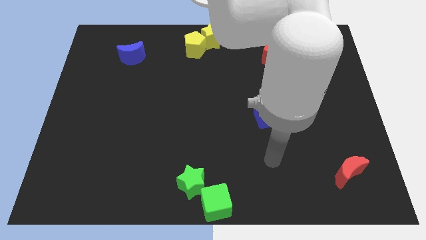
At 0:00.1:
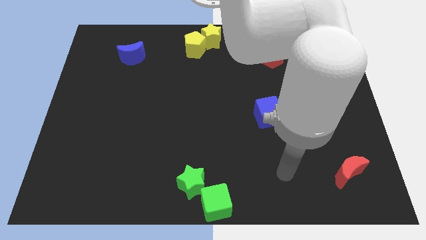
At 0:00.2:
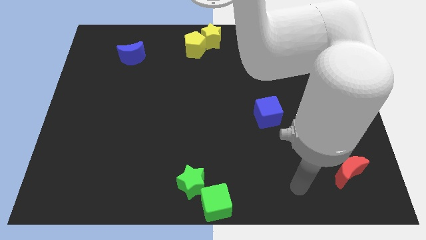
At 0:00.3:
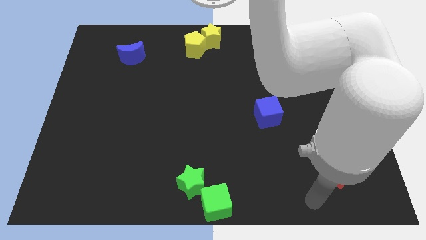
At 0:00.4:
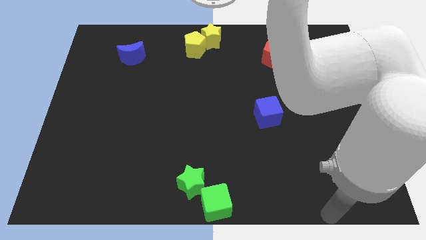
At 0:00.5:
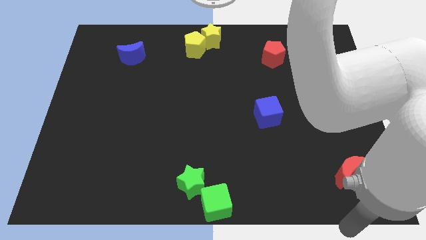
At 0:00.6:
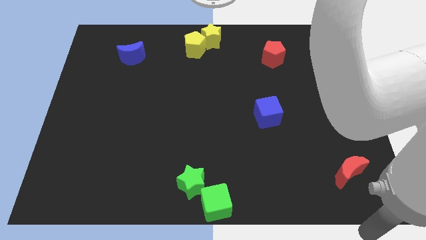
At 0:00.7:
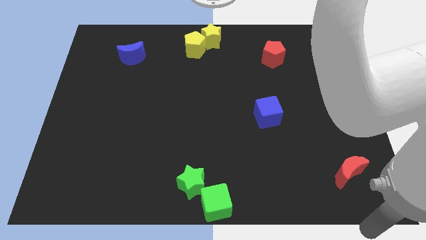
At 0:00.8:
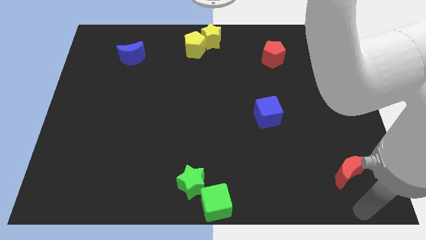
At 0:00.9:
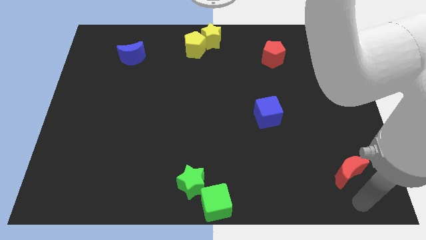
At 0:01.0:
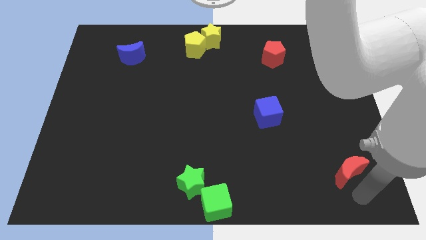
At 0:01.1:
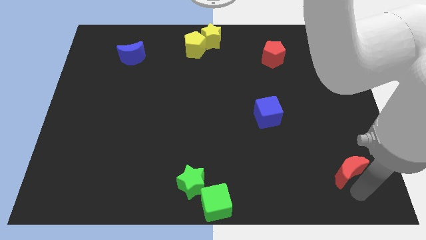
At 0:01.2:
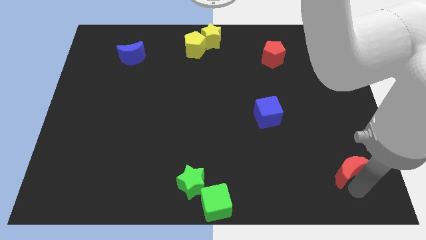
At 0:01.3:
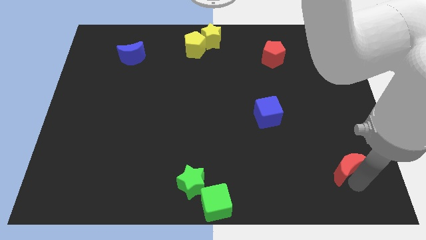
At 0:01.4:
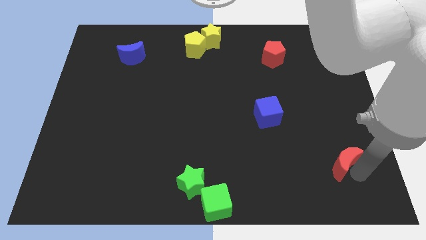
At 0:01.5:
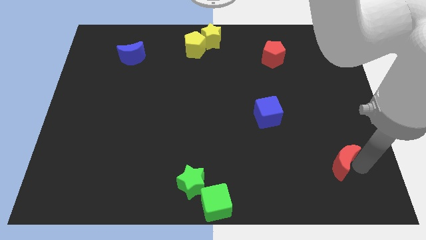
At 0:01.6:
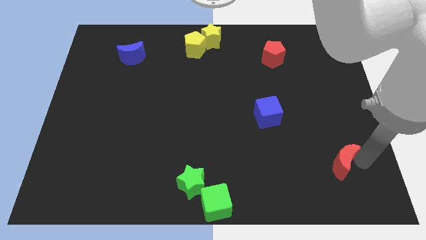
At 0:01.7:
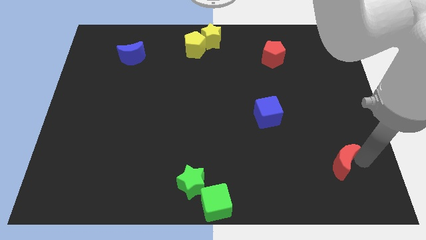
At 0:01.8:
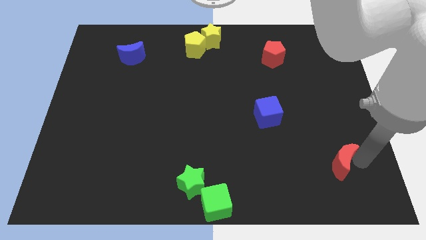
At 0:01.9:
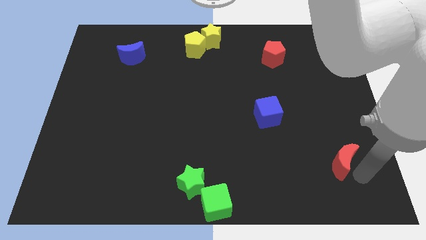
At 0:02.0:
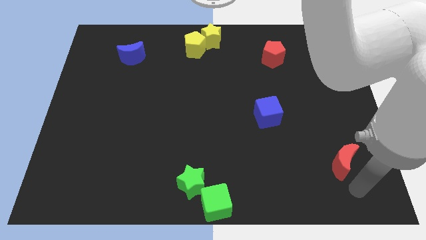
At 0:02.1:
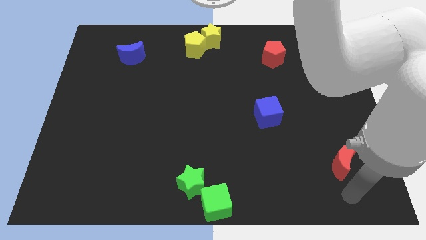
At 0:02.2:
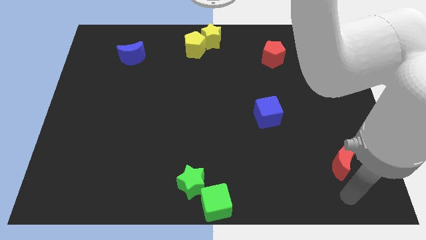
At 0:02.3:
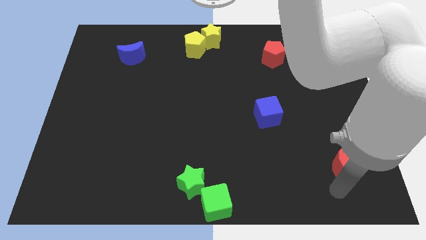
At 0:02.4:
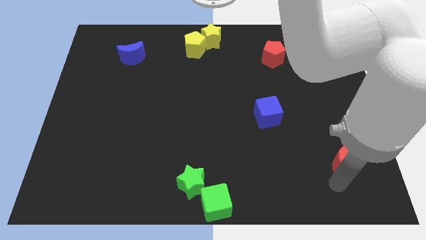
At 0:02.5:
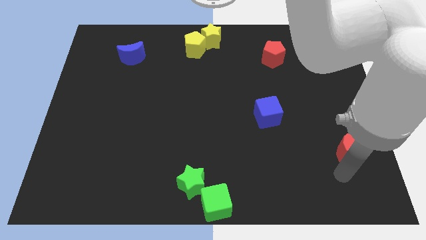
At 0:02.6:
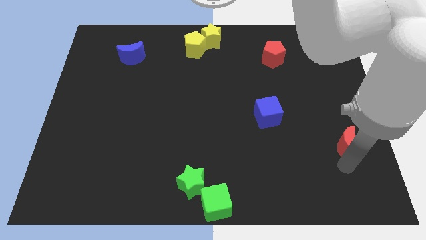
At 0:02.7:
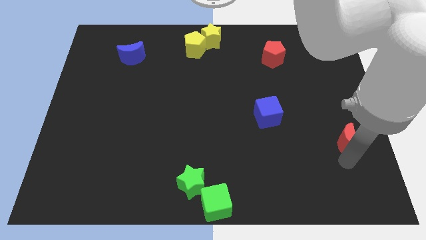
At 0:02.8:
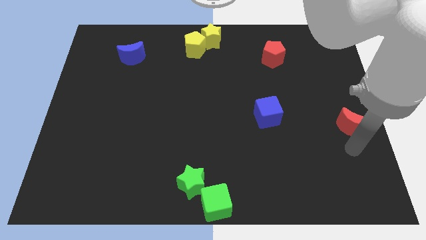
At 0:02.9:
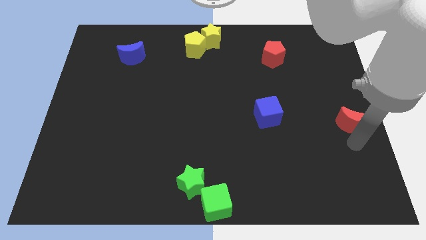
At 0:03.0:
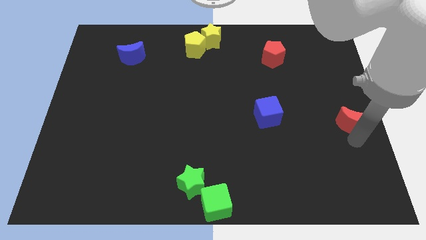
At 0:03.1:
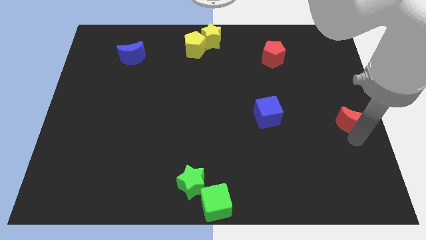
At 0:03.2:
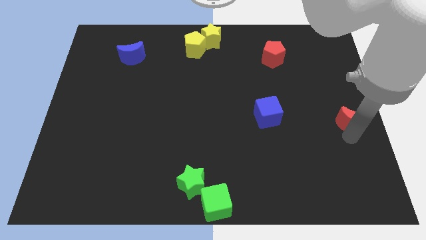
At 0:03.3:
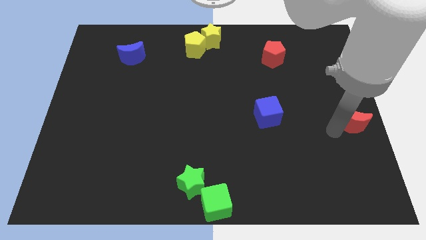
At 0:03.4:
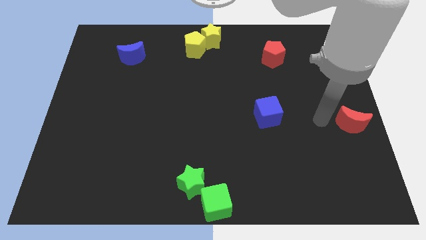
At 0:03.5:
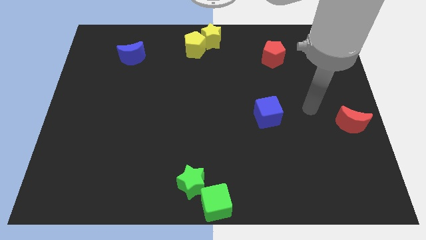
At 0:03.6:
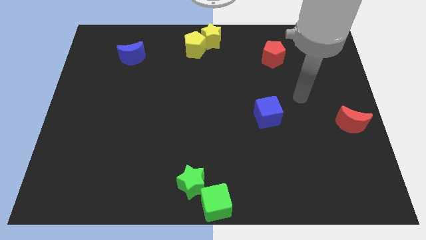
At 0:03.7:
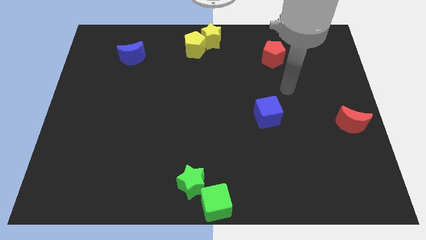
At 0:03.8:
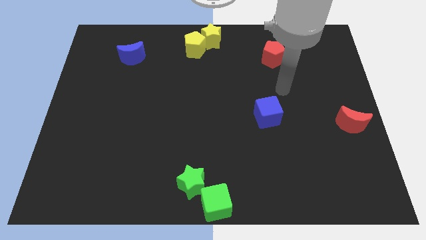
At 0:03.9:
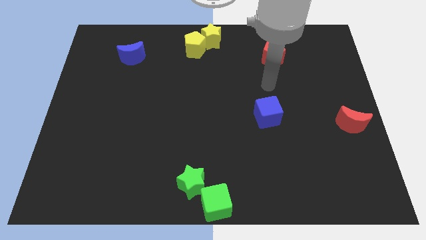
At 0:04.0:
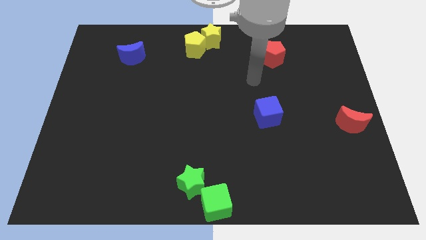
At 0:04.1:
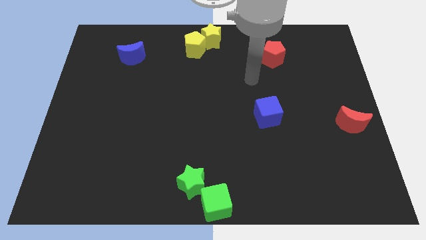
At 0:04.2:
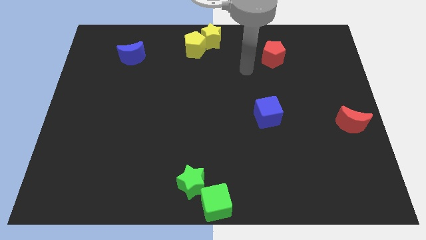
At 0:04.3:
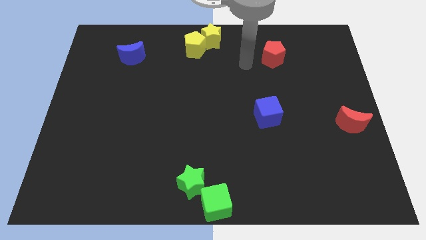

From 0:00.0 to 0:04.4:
push the red crescent to the right of the blue cube

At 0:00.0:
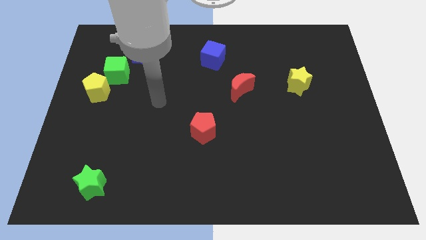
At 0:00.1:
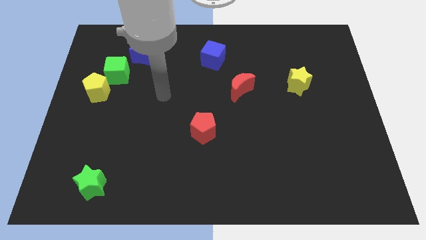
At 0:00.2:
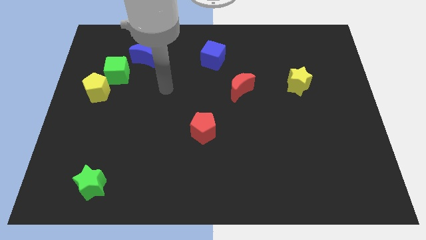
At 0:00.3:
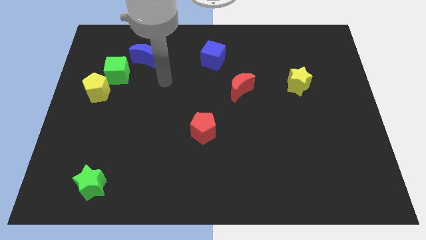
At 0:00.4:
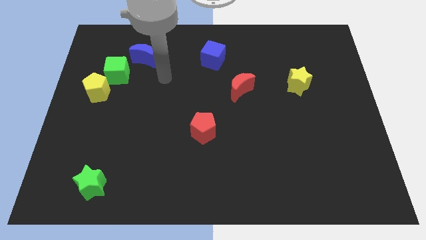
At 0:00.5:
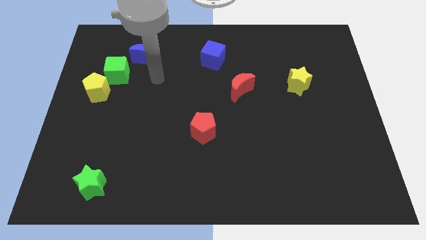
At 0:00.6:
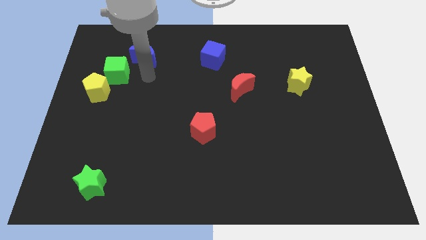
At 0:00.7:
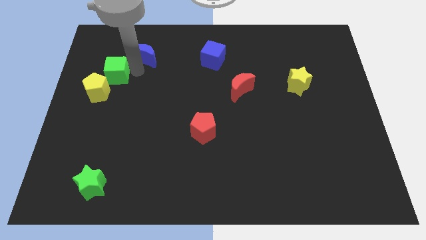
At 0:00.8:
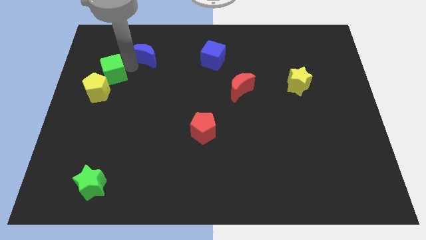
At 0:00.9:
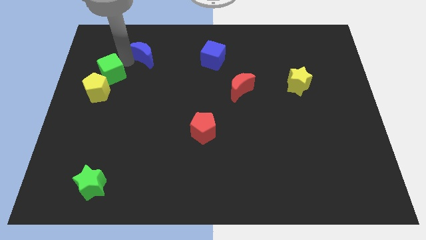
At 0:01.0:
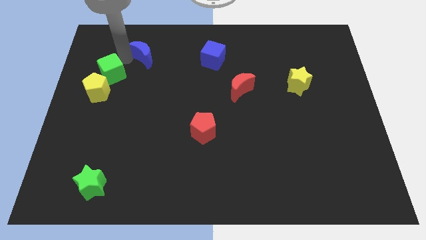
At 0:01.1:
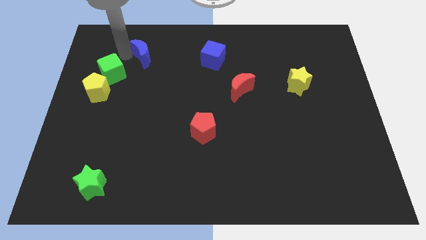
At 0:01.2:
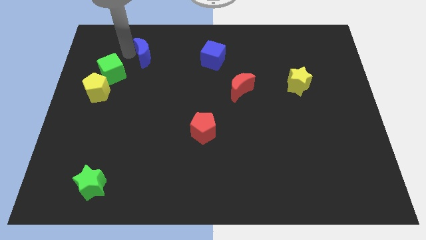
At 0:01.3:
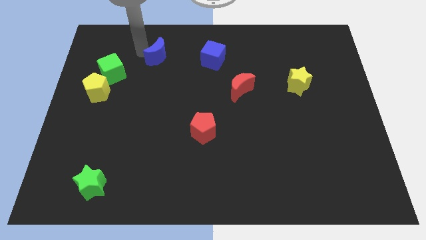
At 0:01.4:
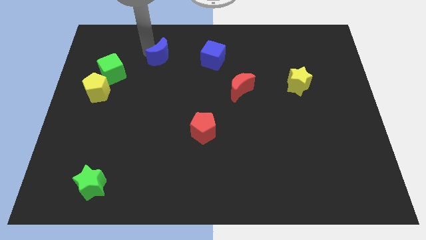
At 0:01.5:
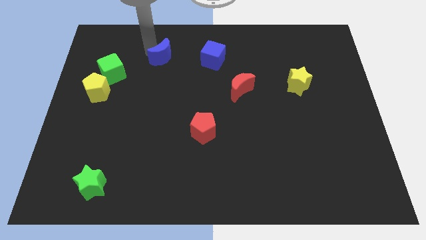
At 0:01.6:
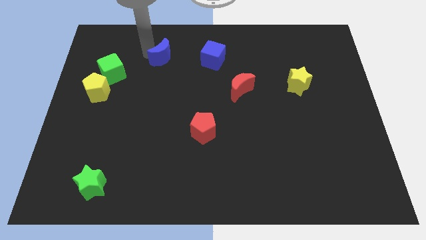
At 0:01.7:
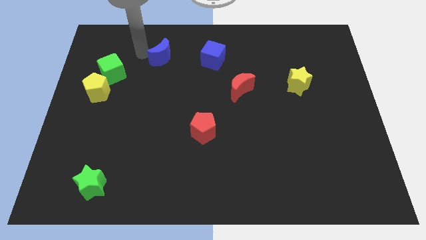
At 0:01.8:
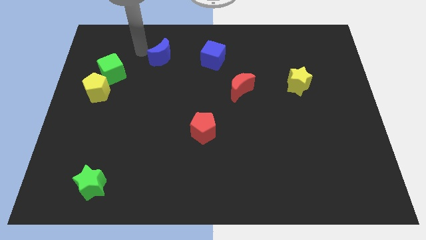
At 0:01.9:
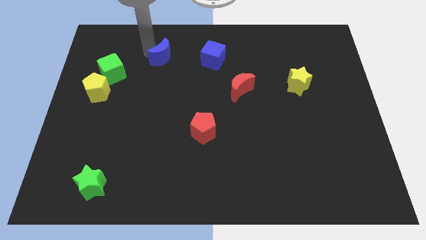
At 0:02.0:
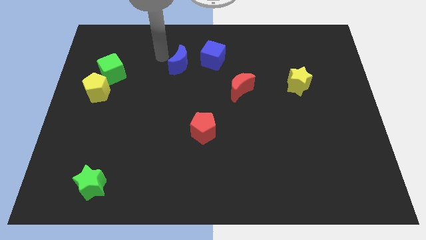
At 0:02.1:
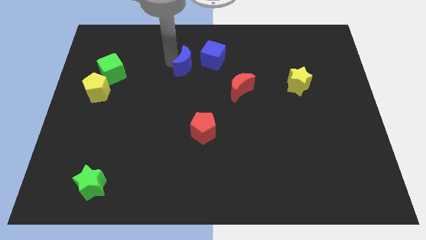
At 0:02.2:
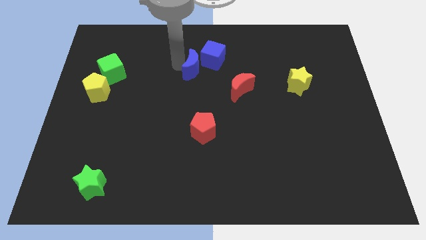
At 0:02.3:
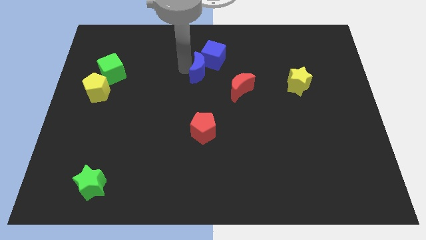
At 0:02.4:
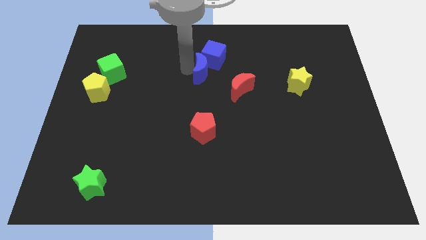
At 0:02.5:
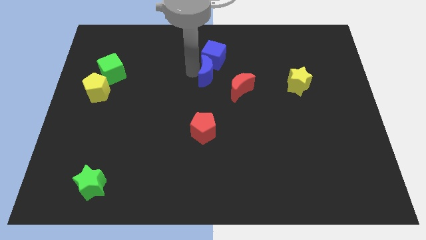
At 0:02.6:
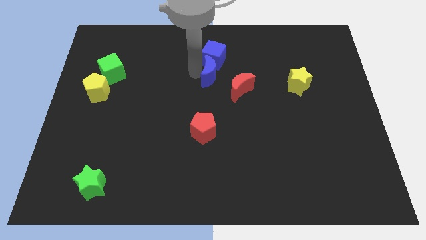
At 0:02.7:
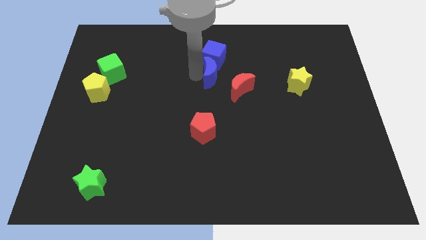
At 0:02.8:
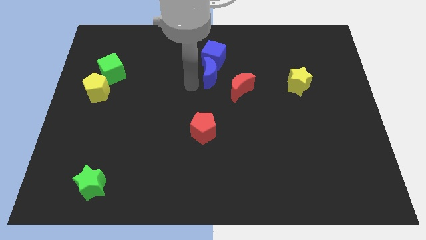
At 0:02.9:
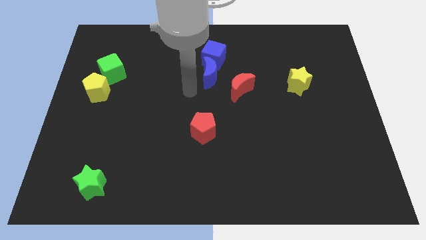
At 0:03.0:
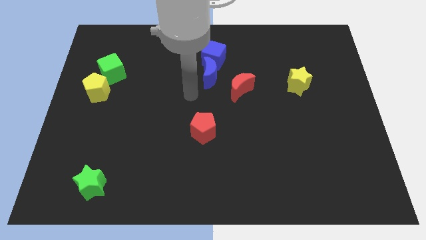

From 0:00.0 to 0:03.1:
place blue moon below blue cube

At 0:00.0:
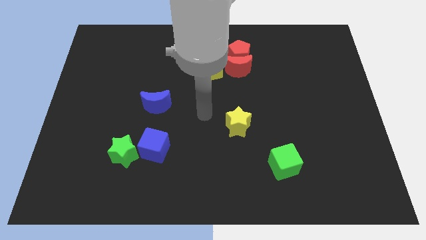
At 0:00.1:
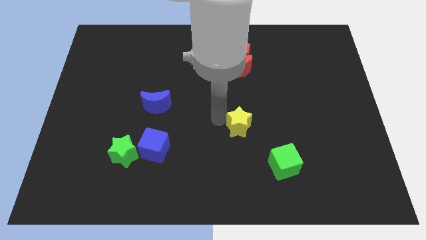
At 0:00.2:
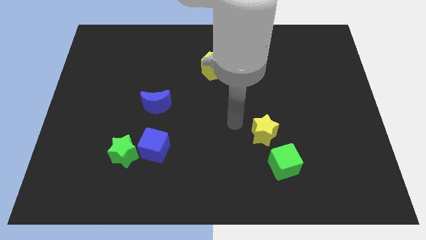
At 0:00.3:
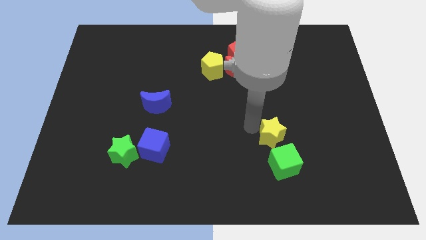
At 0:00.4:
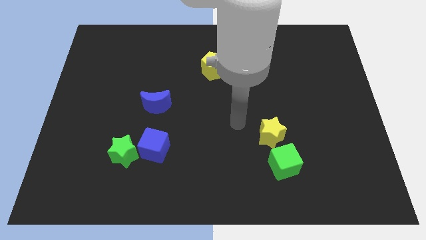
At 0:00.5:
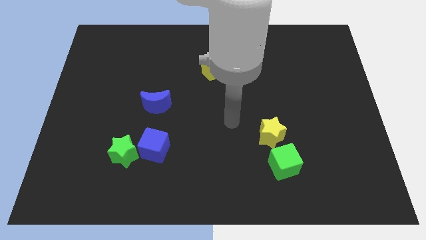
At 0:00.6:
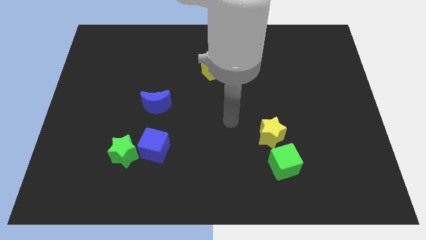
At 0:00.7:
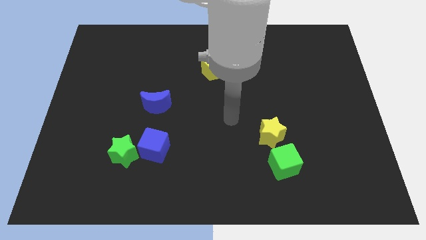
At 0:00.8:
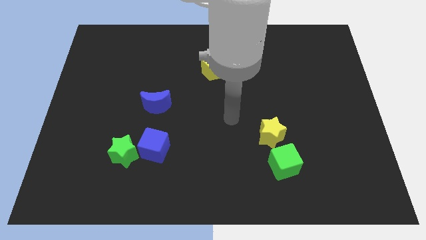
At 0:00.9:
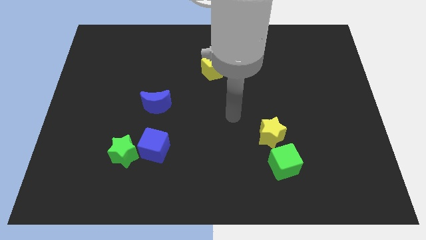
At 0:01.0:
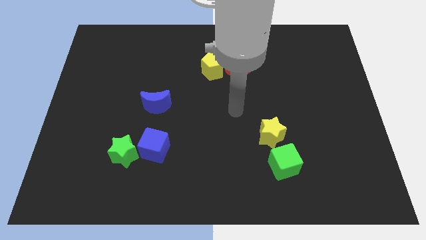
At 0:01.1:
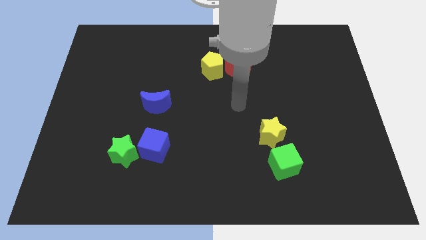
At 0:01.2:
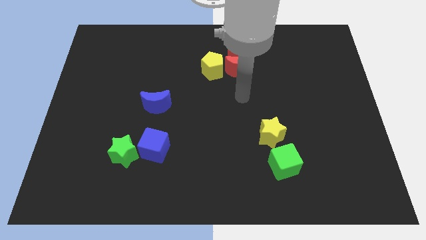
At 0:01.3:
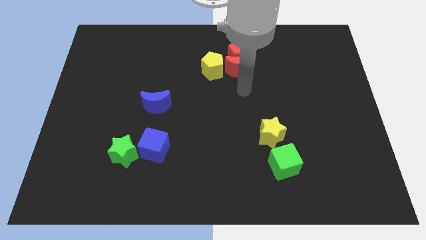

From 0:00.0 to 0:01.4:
place the yellow star vertically above the green cube
